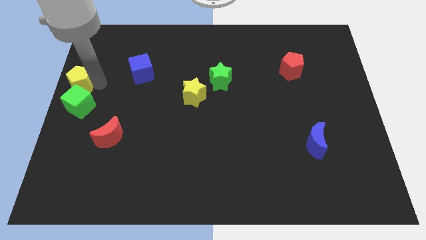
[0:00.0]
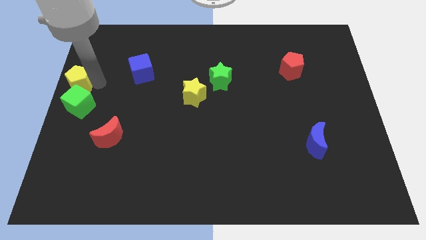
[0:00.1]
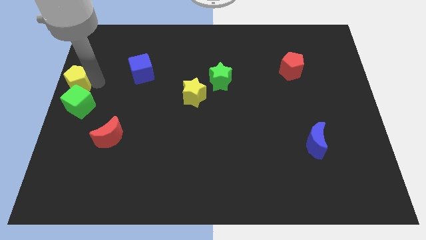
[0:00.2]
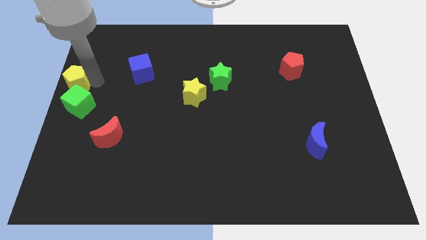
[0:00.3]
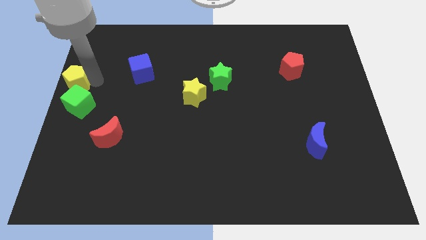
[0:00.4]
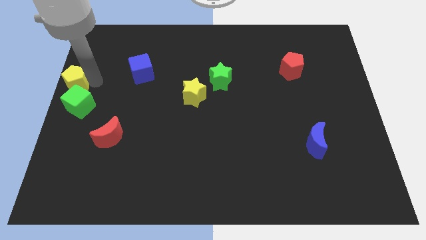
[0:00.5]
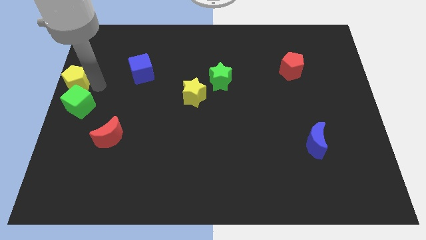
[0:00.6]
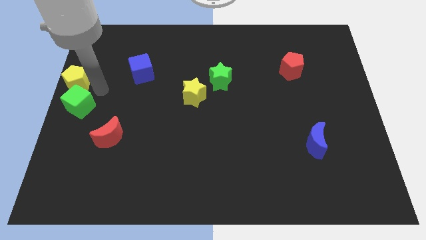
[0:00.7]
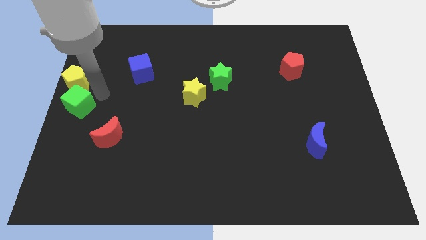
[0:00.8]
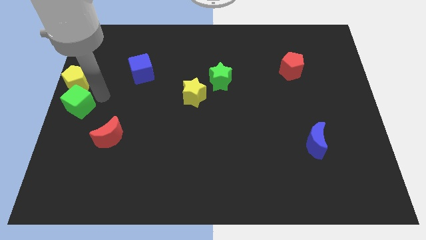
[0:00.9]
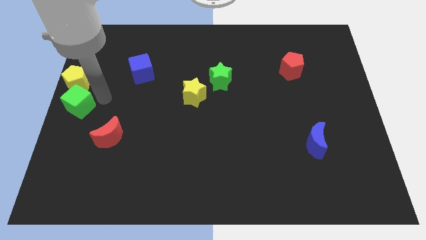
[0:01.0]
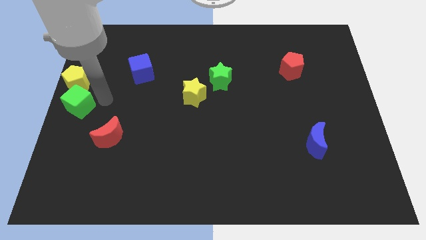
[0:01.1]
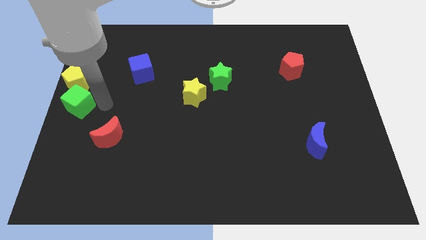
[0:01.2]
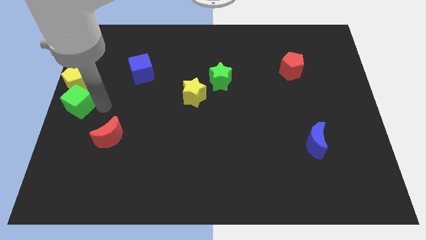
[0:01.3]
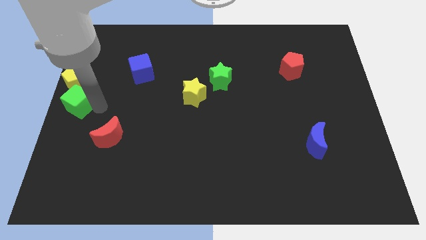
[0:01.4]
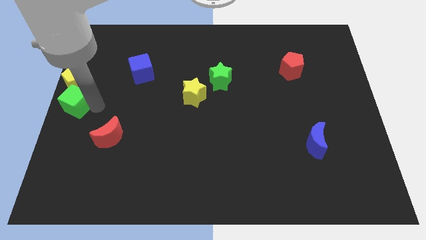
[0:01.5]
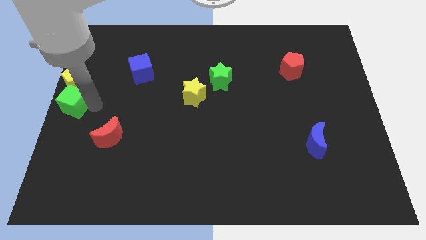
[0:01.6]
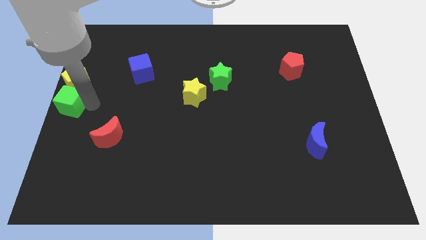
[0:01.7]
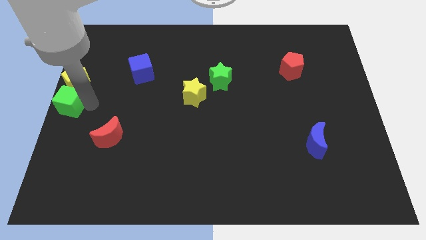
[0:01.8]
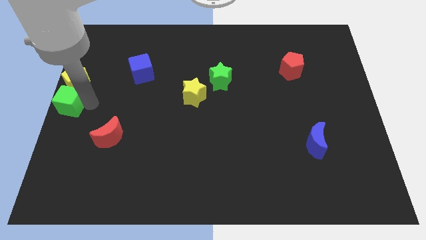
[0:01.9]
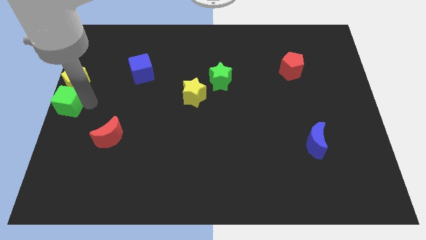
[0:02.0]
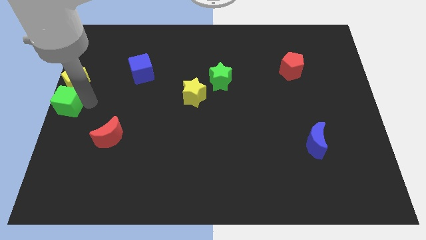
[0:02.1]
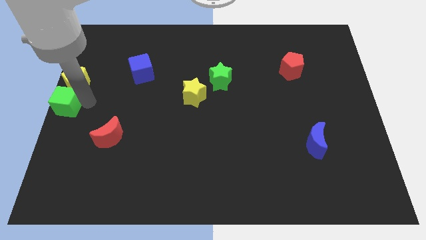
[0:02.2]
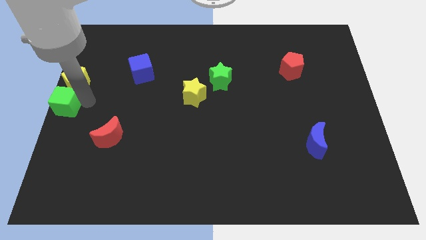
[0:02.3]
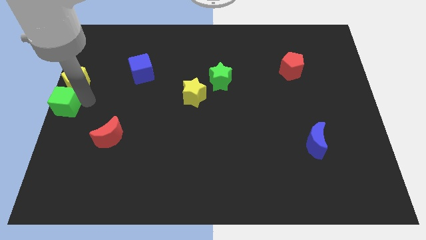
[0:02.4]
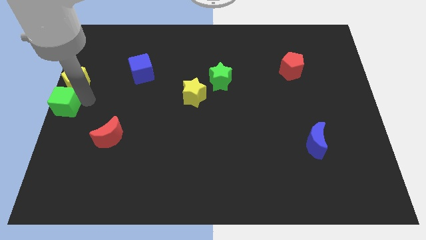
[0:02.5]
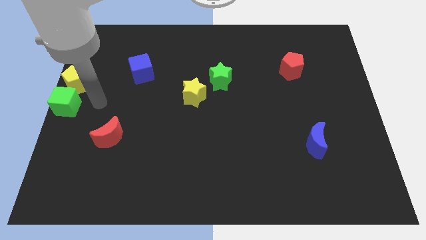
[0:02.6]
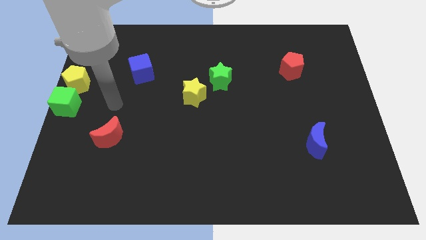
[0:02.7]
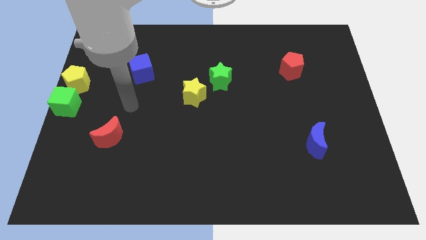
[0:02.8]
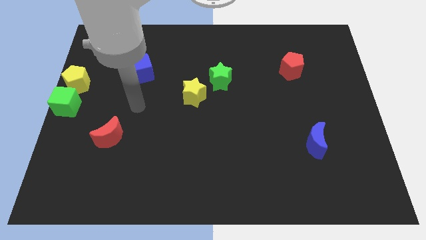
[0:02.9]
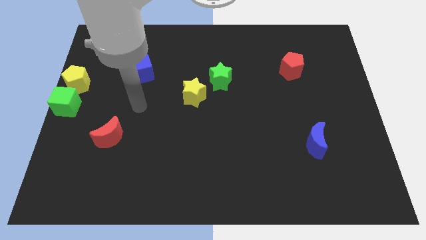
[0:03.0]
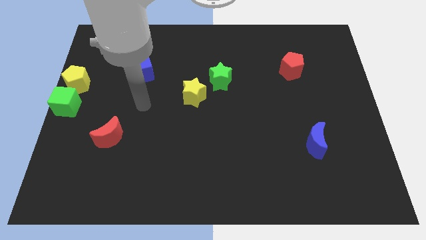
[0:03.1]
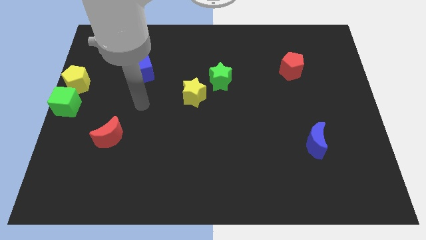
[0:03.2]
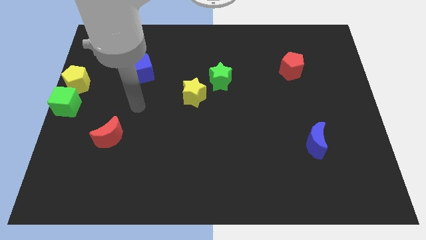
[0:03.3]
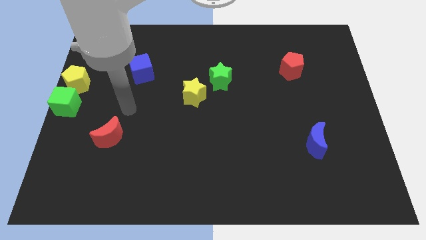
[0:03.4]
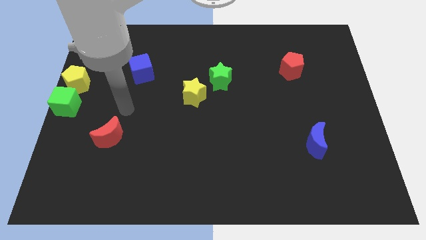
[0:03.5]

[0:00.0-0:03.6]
push the yellow pentagon and green cube

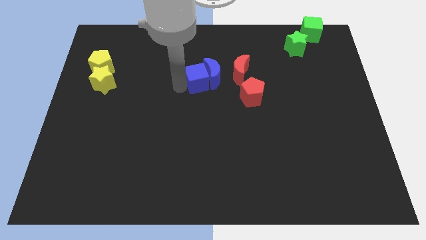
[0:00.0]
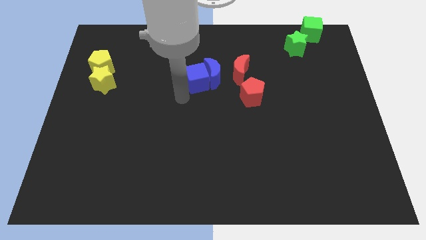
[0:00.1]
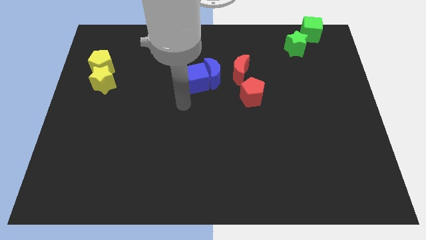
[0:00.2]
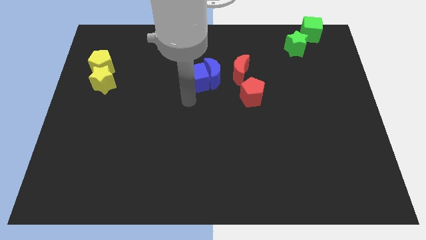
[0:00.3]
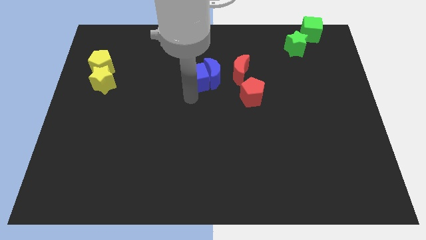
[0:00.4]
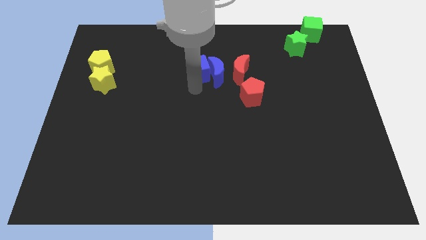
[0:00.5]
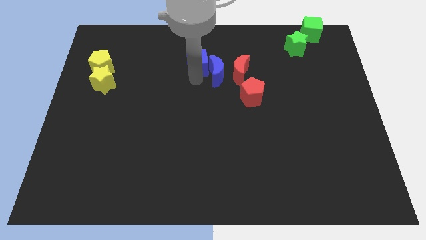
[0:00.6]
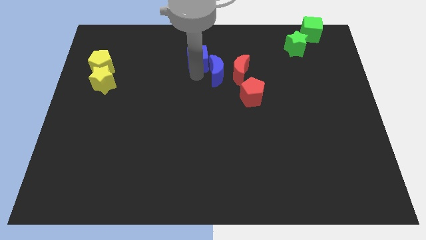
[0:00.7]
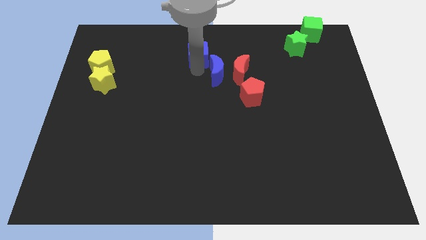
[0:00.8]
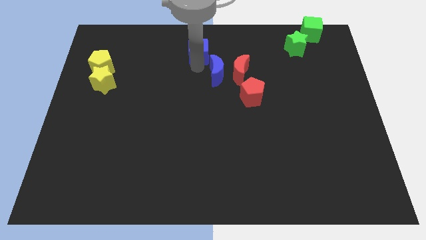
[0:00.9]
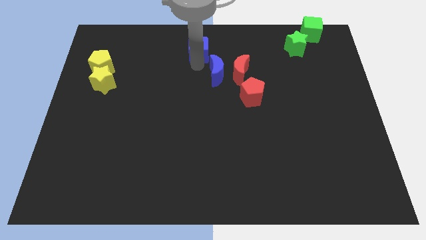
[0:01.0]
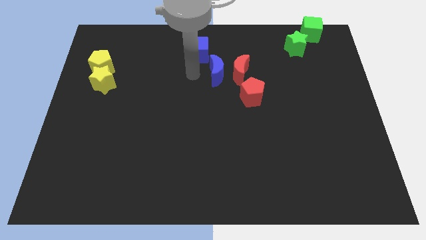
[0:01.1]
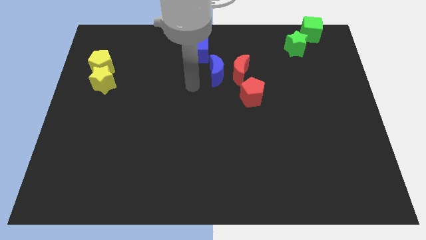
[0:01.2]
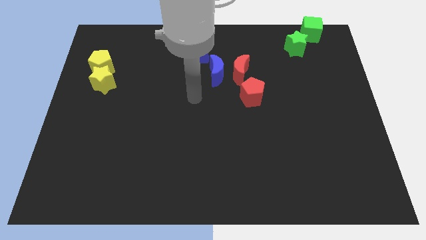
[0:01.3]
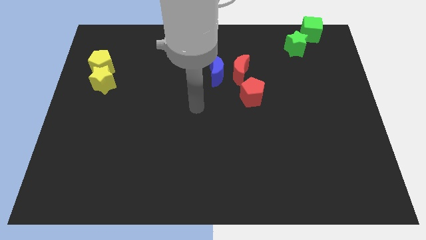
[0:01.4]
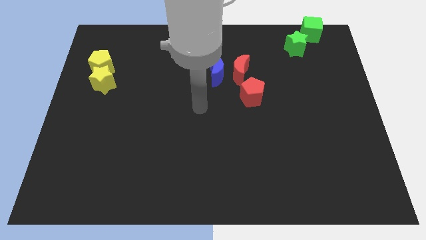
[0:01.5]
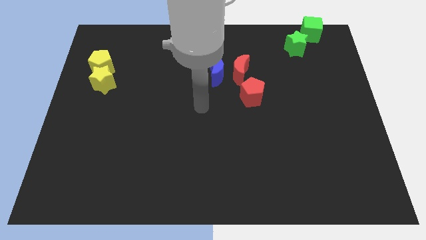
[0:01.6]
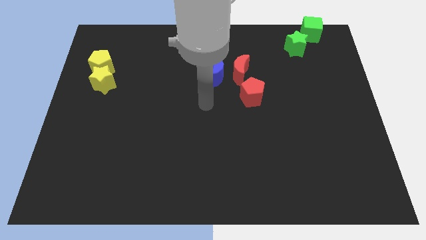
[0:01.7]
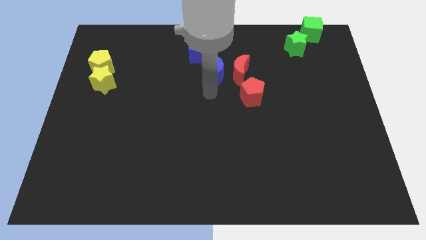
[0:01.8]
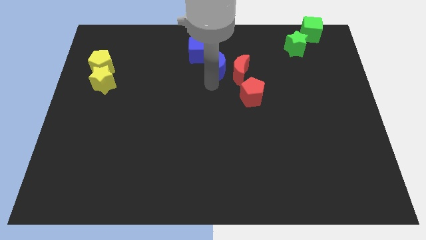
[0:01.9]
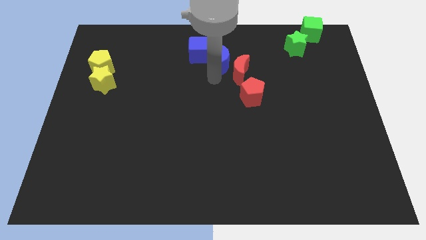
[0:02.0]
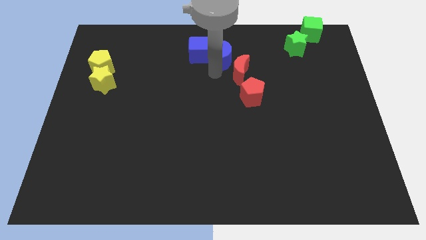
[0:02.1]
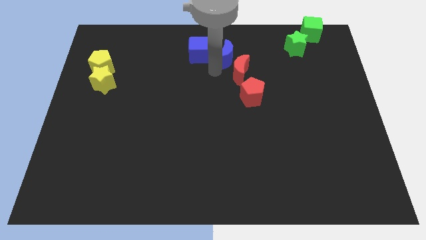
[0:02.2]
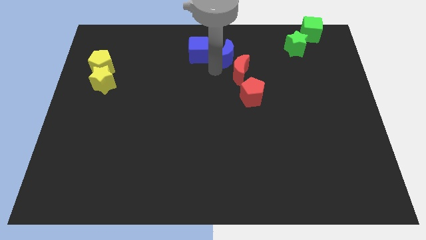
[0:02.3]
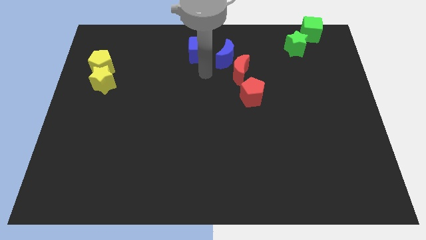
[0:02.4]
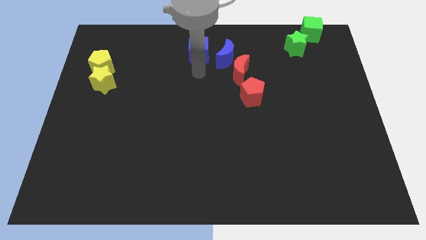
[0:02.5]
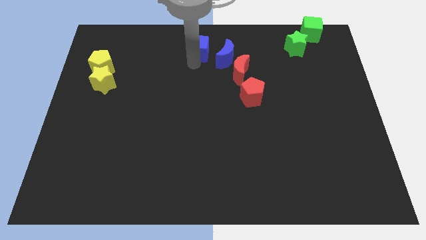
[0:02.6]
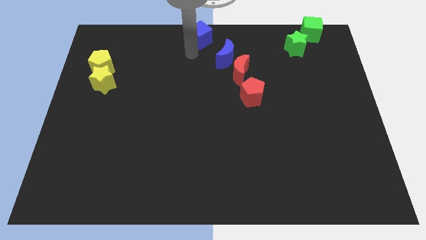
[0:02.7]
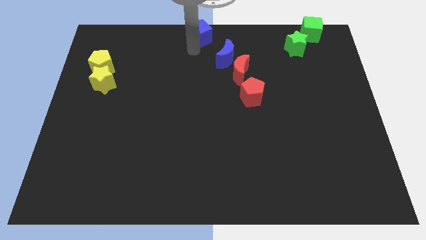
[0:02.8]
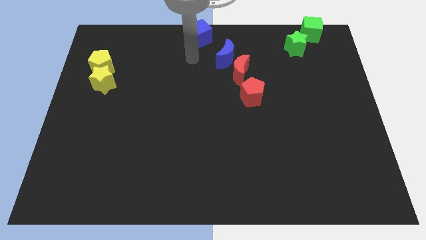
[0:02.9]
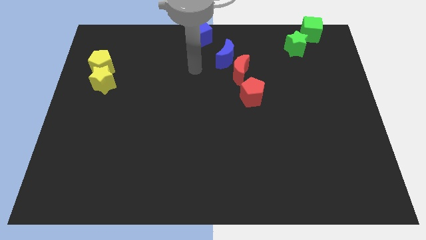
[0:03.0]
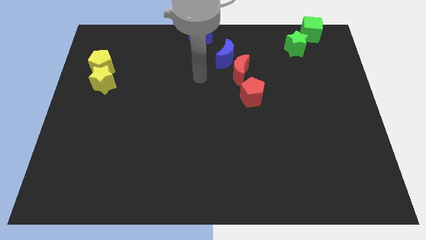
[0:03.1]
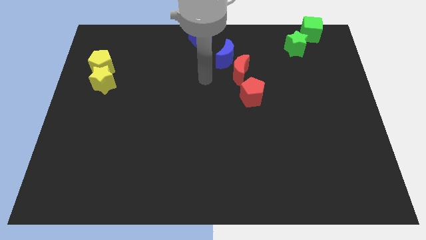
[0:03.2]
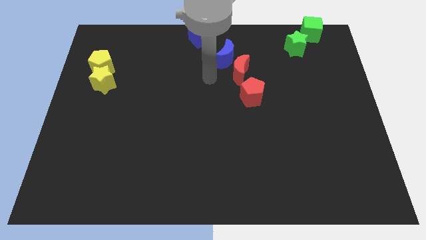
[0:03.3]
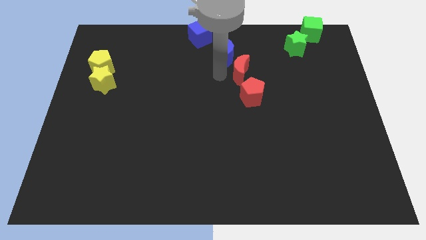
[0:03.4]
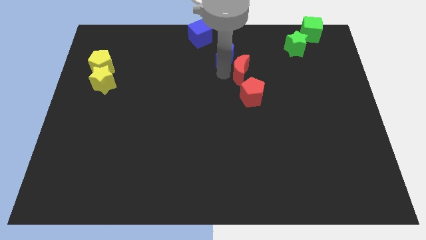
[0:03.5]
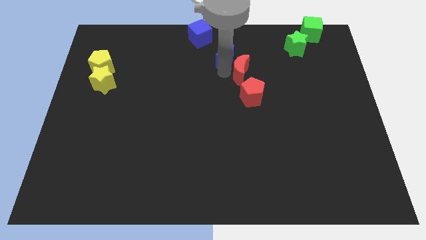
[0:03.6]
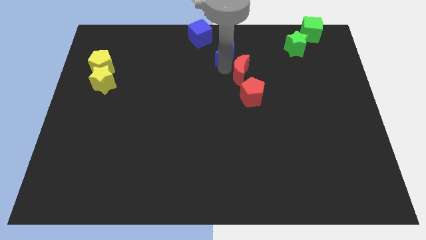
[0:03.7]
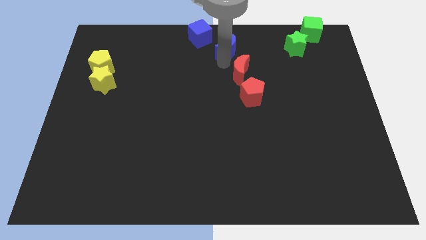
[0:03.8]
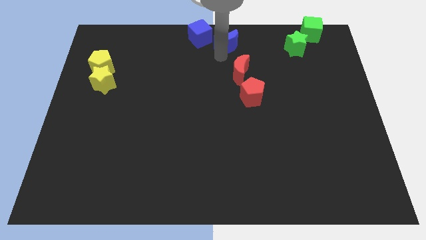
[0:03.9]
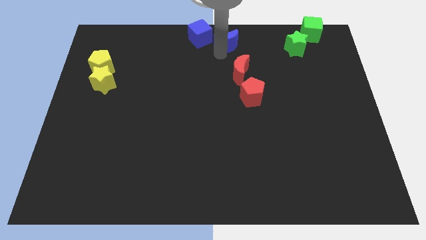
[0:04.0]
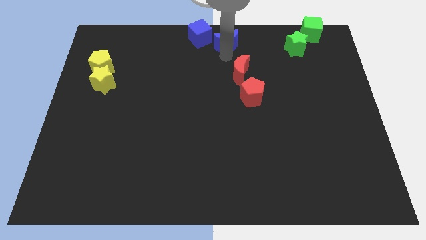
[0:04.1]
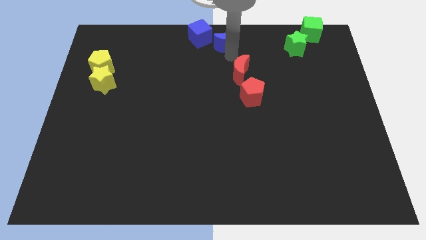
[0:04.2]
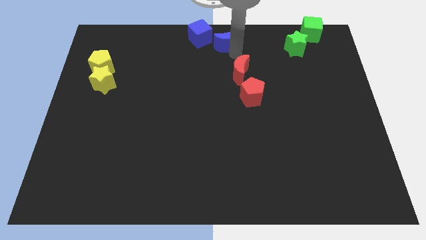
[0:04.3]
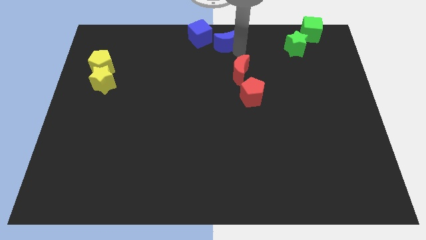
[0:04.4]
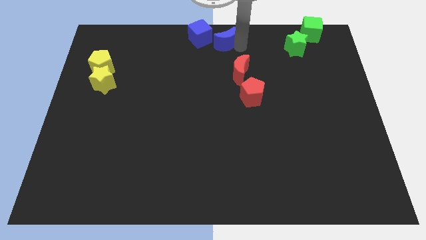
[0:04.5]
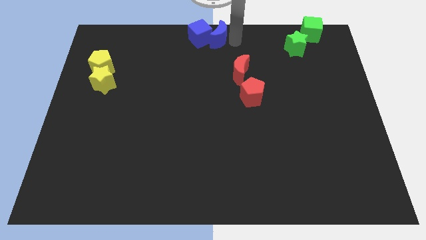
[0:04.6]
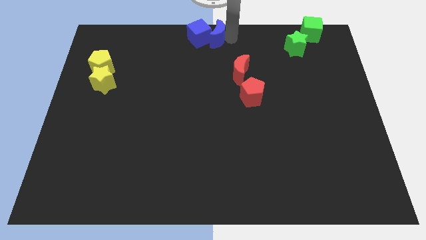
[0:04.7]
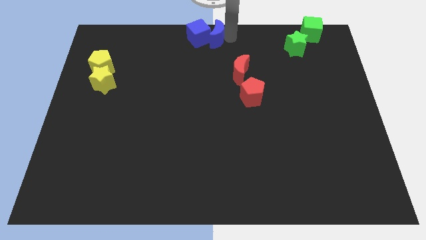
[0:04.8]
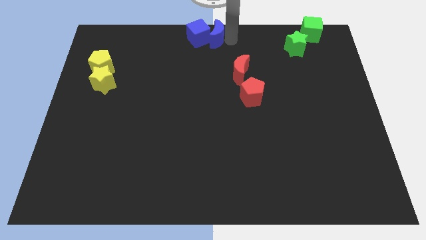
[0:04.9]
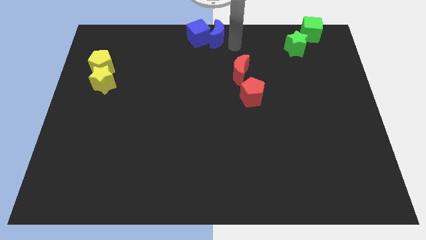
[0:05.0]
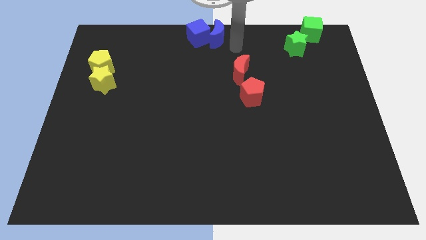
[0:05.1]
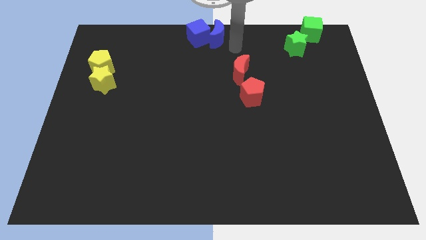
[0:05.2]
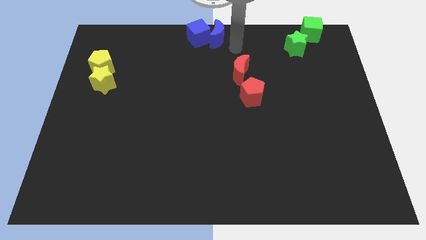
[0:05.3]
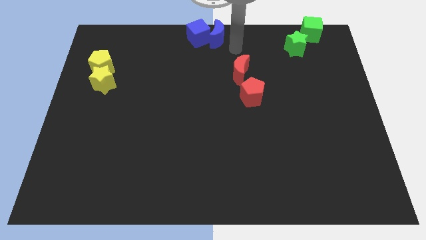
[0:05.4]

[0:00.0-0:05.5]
move the blue blocks to the top center of the board
